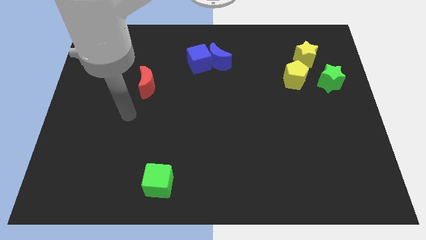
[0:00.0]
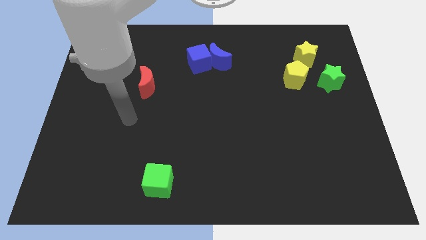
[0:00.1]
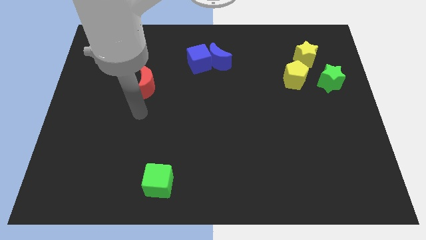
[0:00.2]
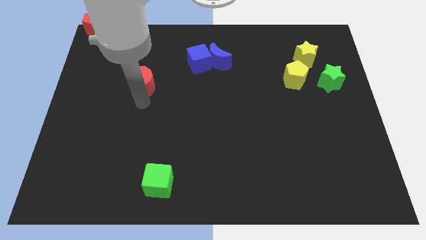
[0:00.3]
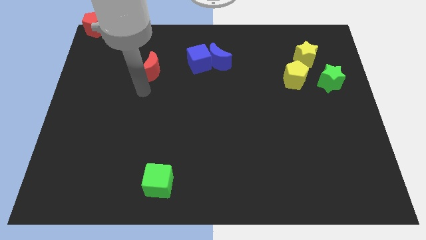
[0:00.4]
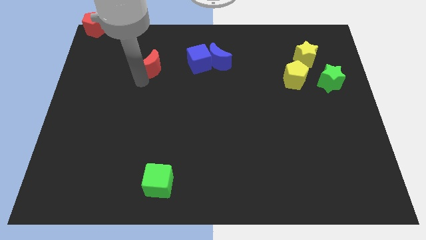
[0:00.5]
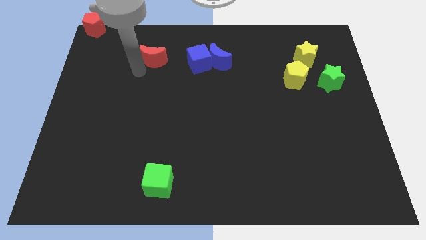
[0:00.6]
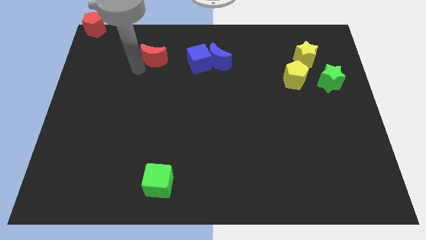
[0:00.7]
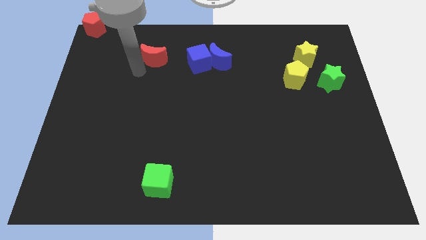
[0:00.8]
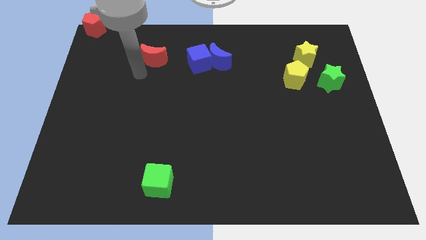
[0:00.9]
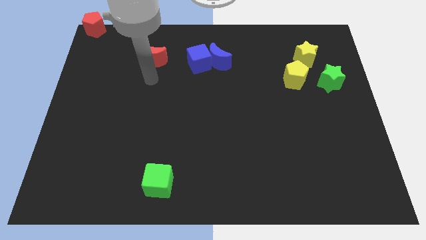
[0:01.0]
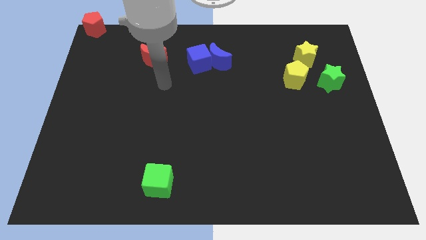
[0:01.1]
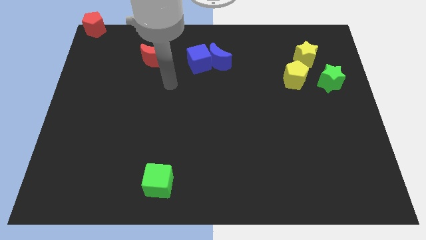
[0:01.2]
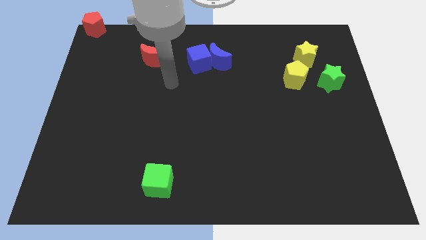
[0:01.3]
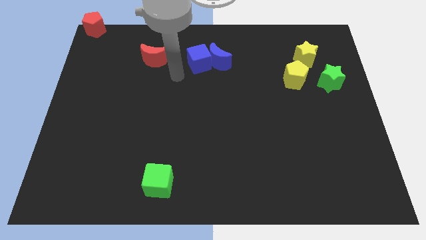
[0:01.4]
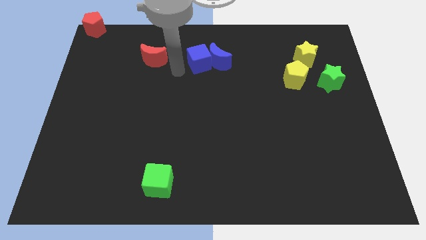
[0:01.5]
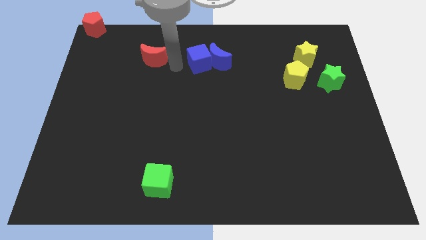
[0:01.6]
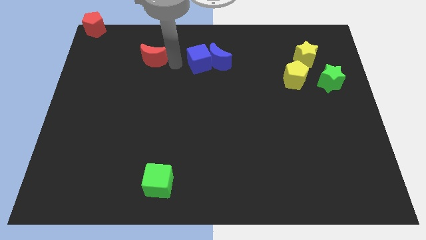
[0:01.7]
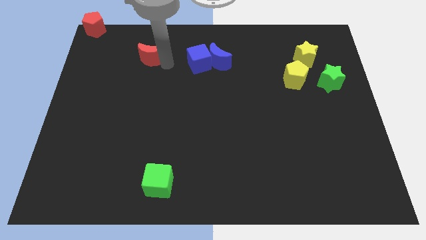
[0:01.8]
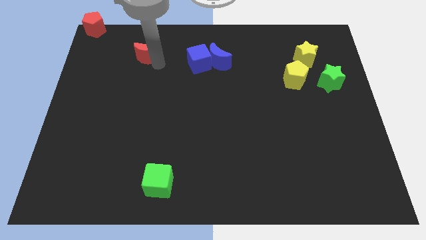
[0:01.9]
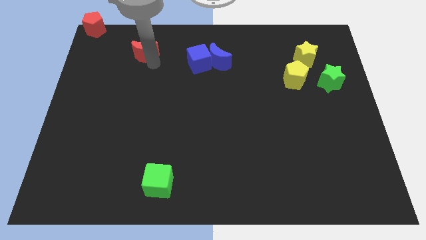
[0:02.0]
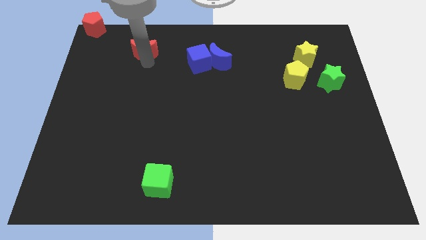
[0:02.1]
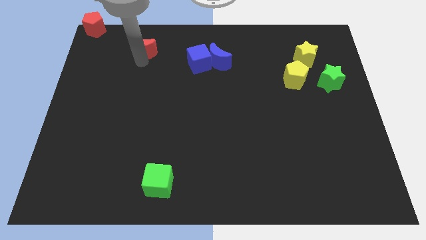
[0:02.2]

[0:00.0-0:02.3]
push the red moon towards the top left side of the board

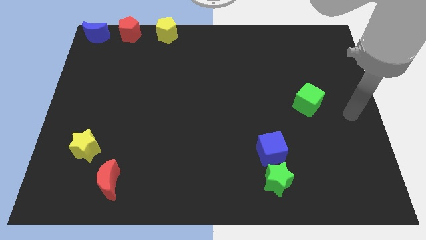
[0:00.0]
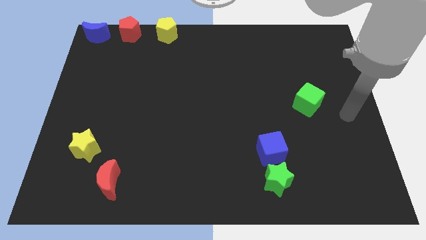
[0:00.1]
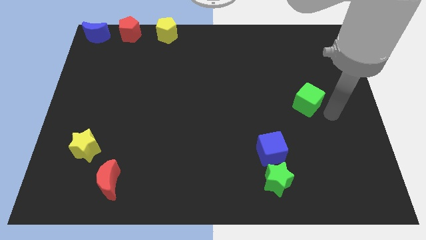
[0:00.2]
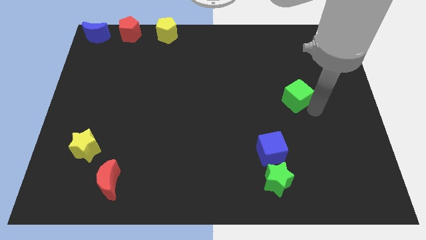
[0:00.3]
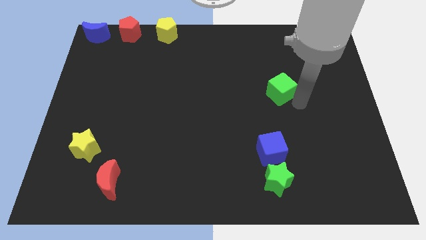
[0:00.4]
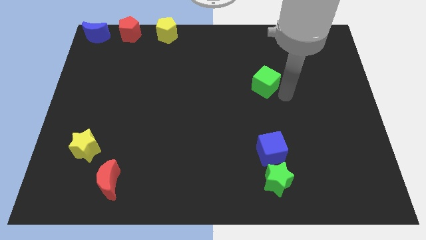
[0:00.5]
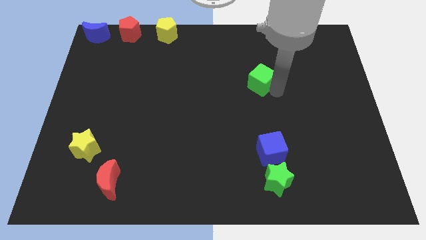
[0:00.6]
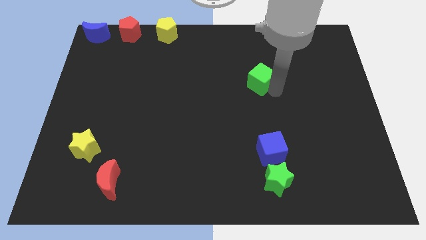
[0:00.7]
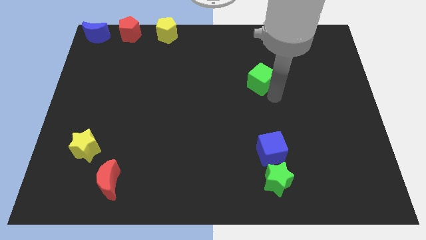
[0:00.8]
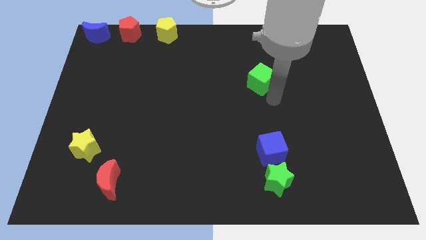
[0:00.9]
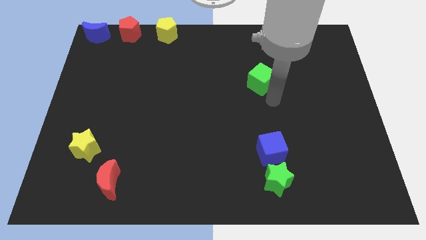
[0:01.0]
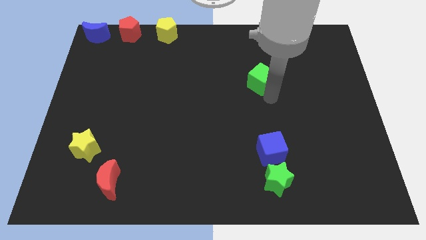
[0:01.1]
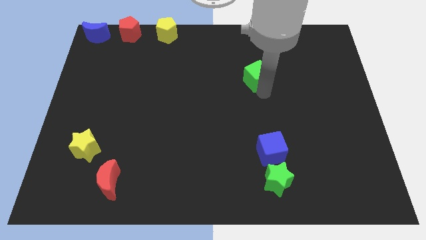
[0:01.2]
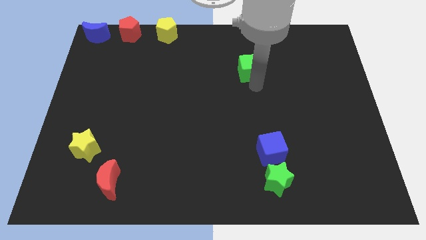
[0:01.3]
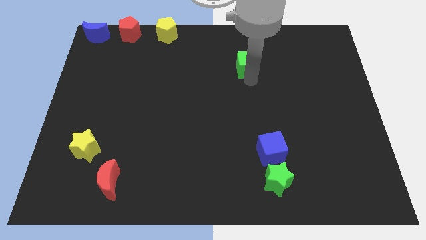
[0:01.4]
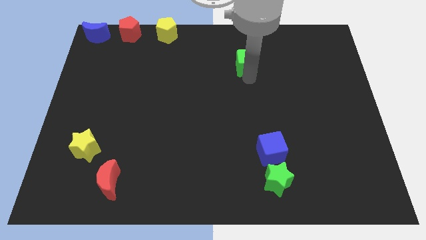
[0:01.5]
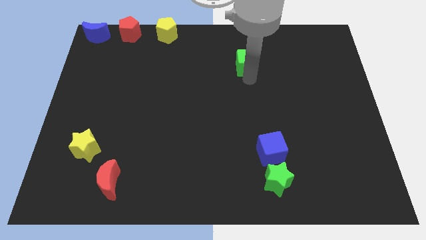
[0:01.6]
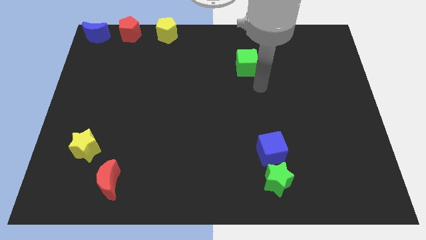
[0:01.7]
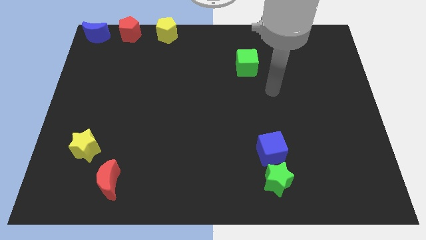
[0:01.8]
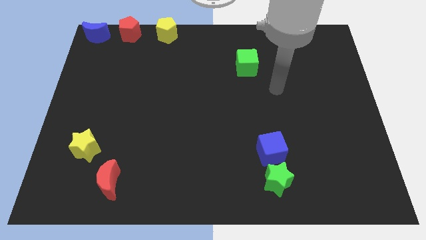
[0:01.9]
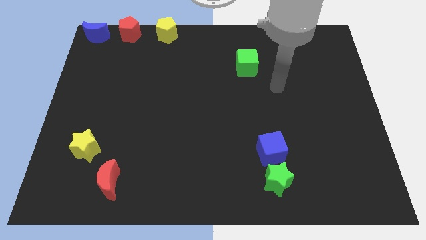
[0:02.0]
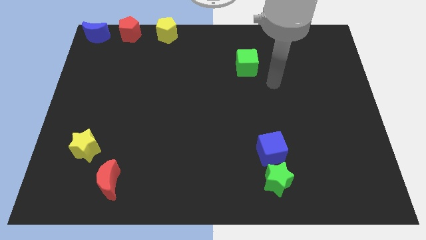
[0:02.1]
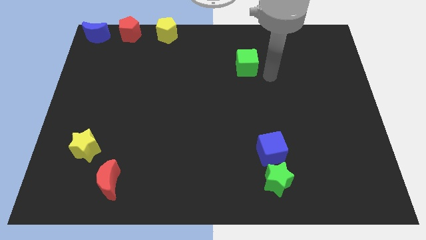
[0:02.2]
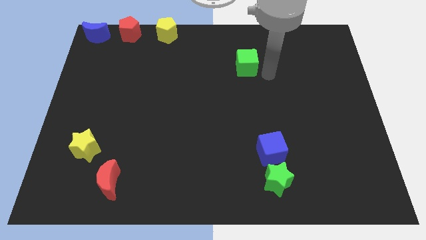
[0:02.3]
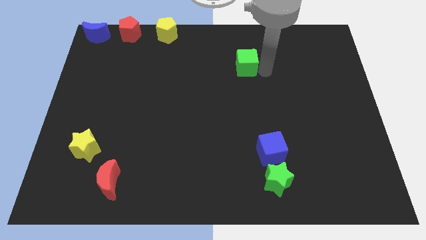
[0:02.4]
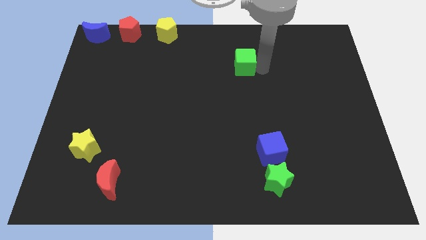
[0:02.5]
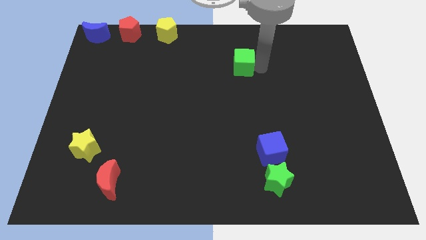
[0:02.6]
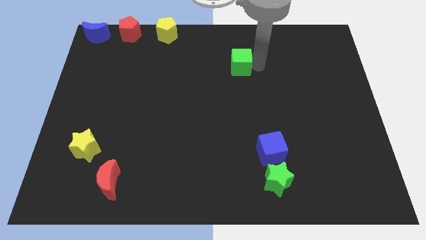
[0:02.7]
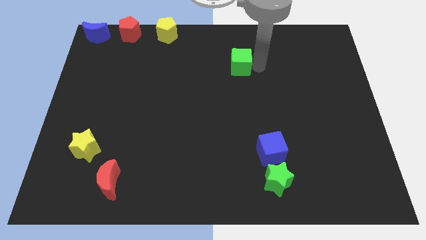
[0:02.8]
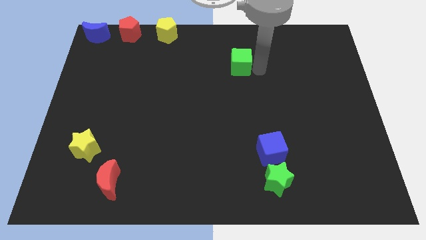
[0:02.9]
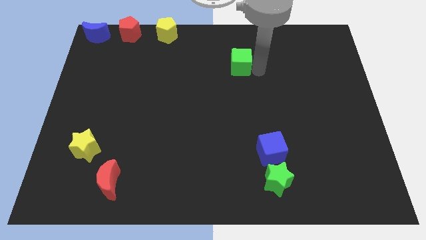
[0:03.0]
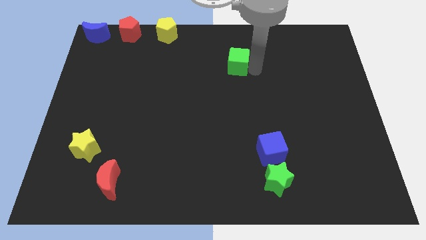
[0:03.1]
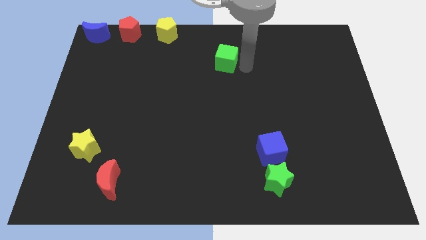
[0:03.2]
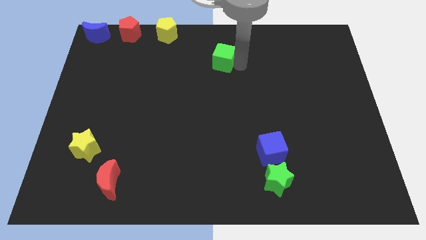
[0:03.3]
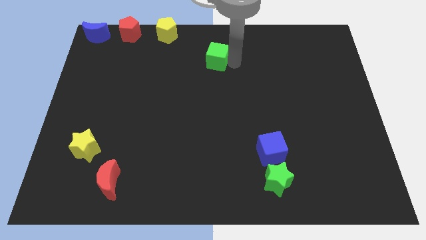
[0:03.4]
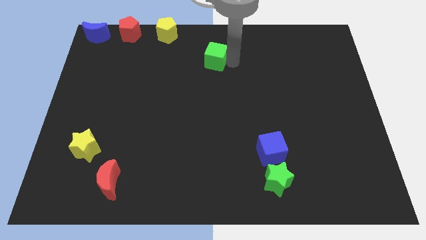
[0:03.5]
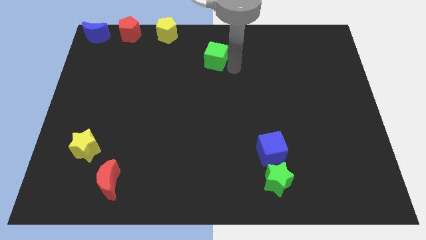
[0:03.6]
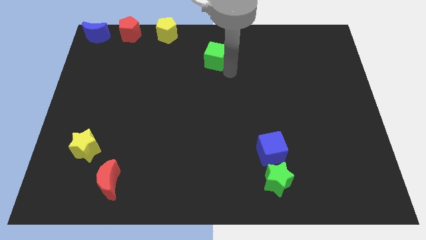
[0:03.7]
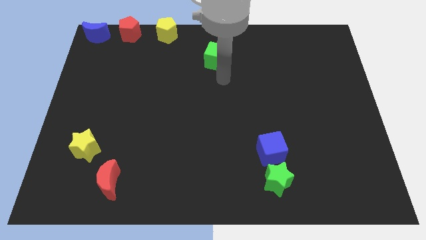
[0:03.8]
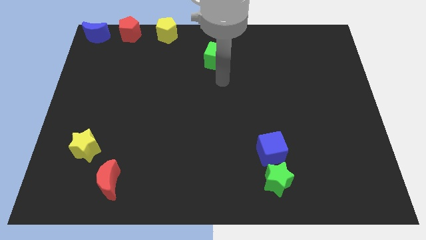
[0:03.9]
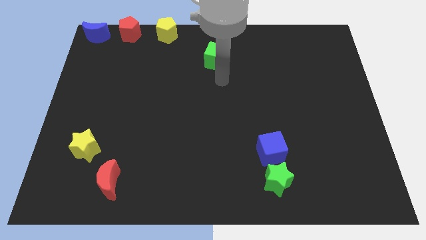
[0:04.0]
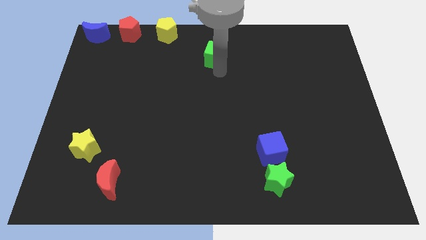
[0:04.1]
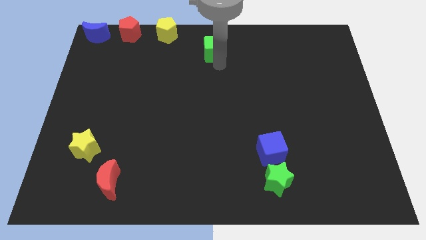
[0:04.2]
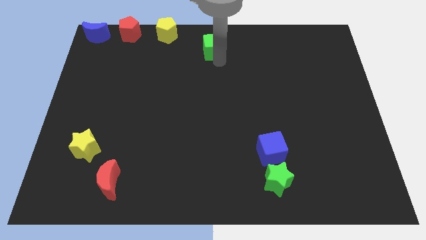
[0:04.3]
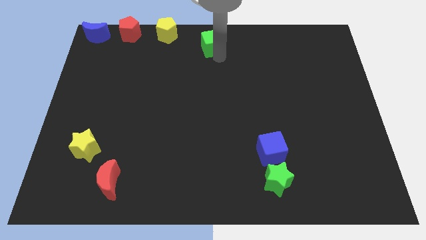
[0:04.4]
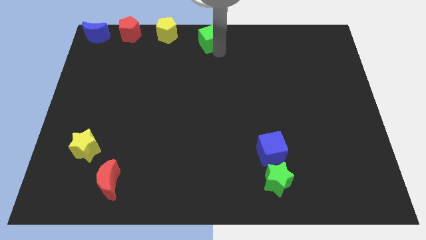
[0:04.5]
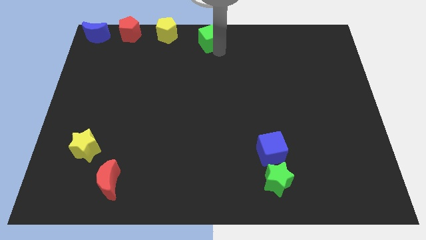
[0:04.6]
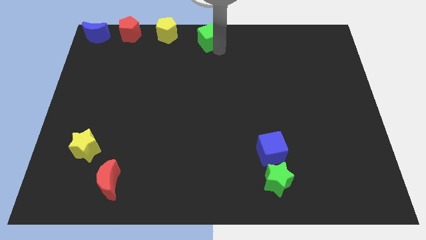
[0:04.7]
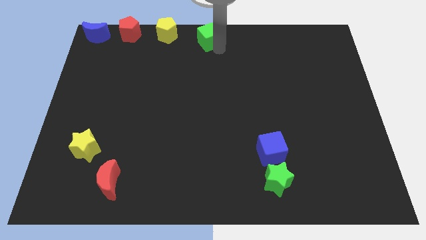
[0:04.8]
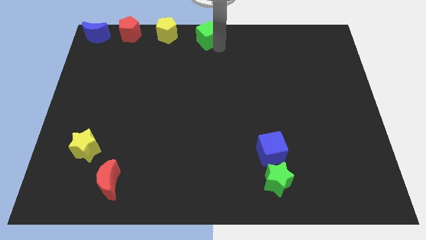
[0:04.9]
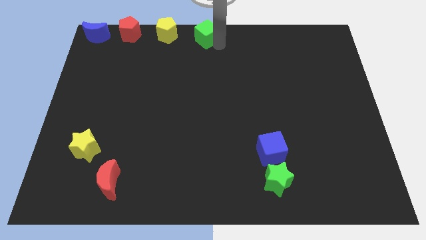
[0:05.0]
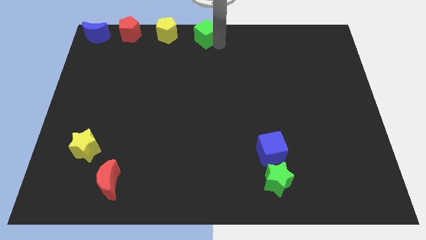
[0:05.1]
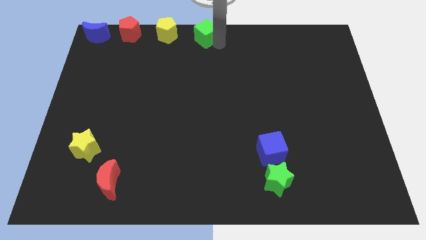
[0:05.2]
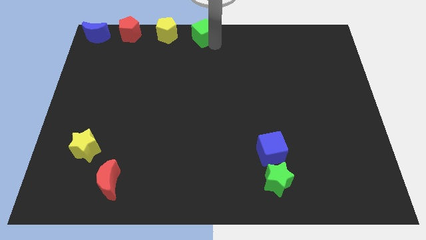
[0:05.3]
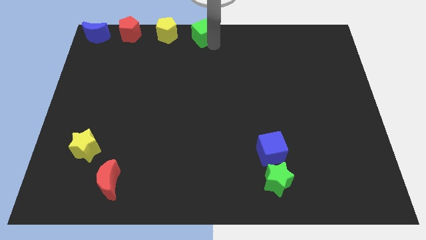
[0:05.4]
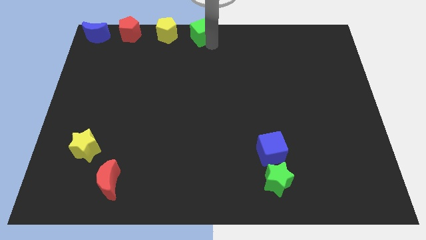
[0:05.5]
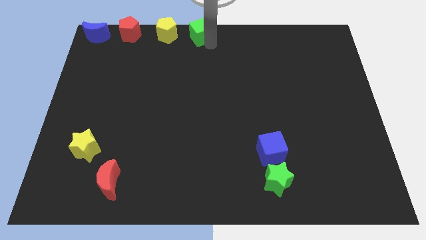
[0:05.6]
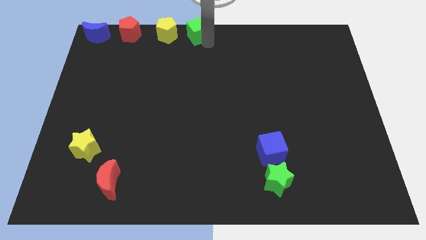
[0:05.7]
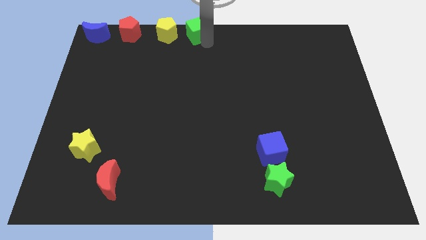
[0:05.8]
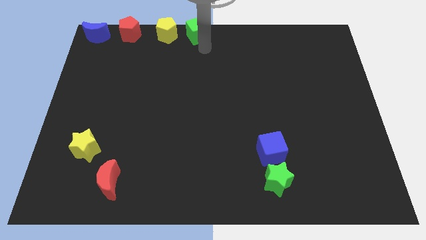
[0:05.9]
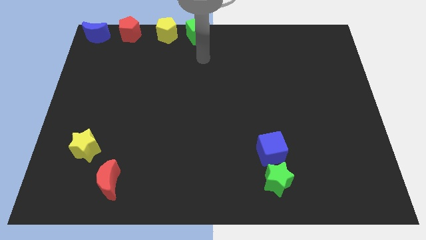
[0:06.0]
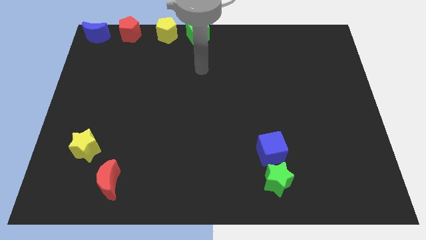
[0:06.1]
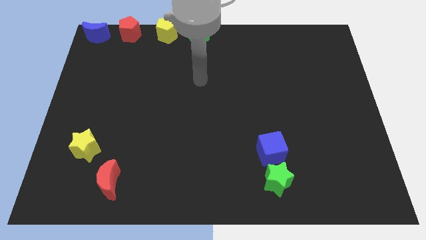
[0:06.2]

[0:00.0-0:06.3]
move the green cube to the right side of the yellow pentagon

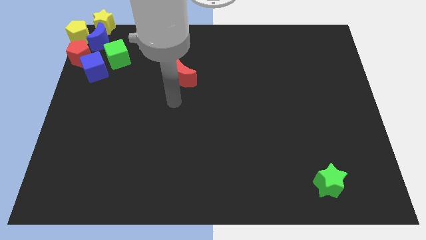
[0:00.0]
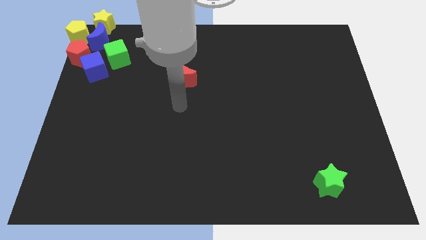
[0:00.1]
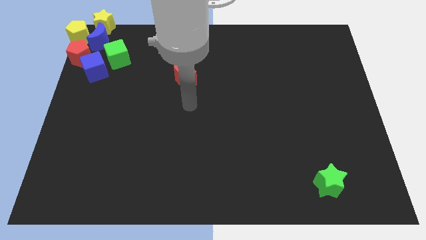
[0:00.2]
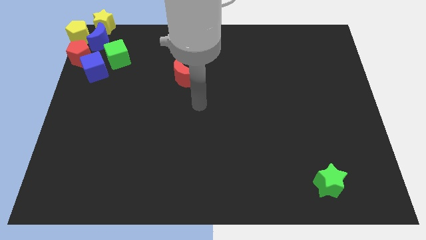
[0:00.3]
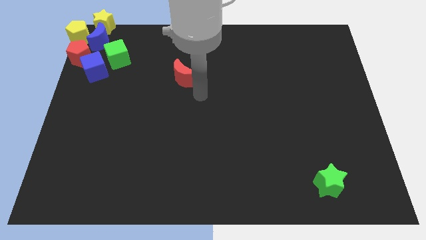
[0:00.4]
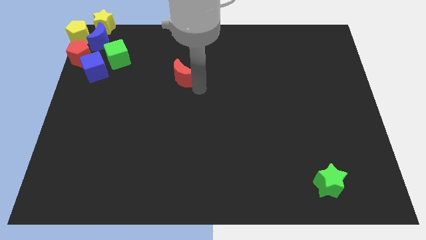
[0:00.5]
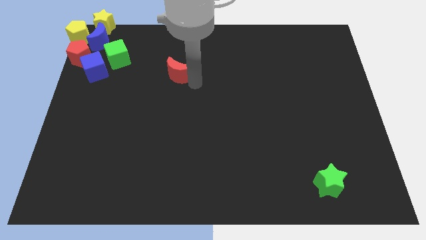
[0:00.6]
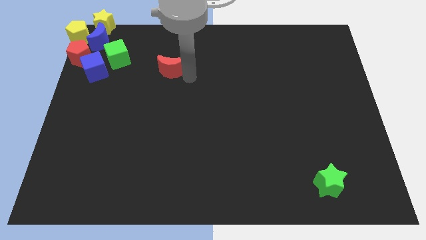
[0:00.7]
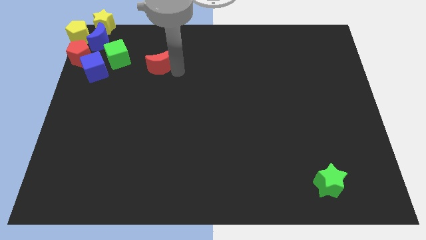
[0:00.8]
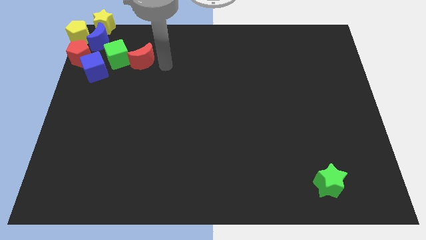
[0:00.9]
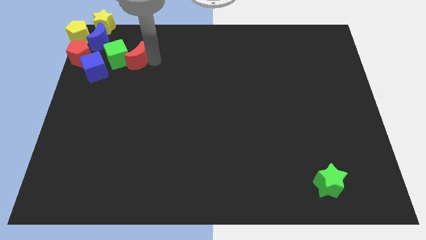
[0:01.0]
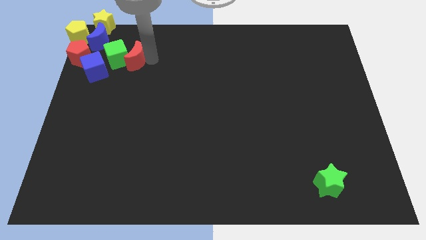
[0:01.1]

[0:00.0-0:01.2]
push red moon into green cube
